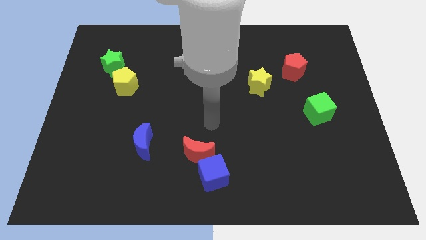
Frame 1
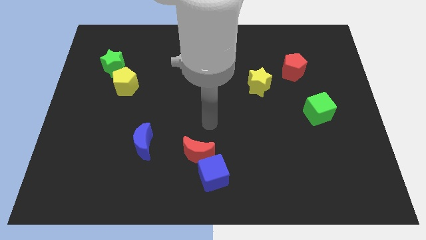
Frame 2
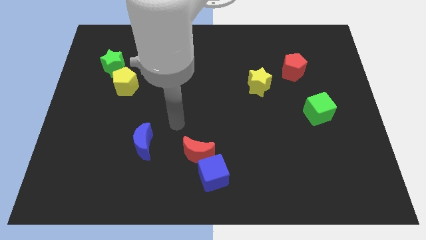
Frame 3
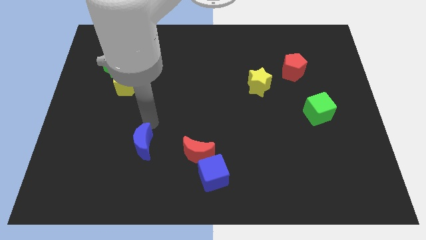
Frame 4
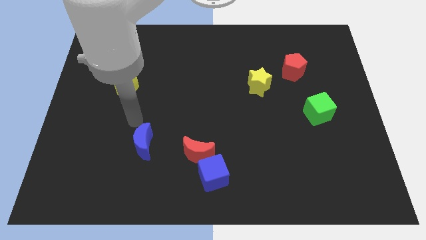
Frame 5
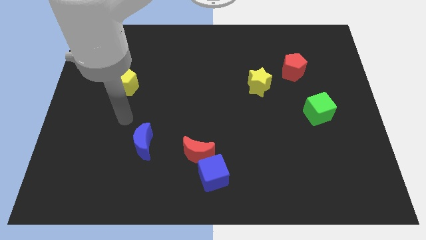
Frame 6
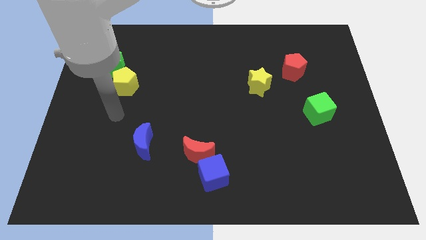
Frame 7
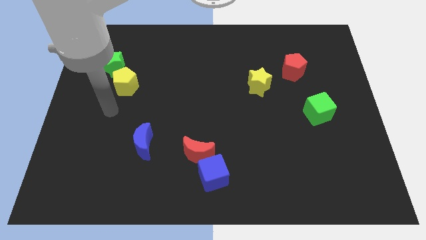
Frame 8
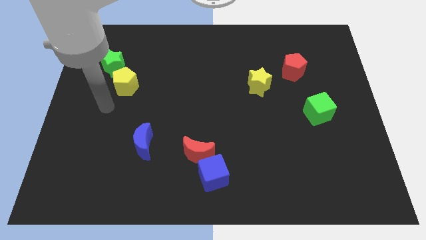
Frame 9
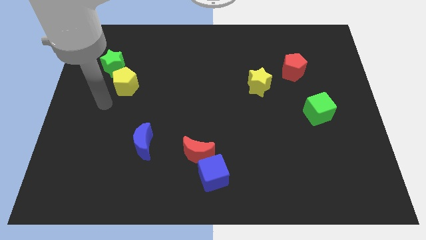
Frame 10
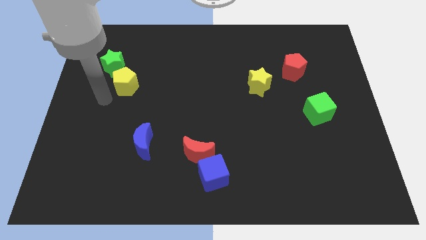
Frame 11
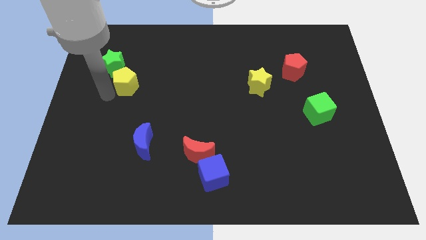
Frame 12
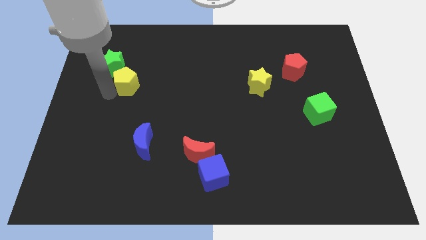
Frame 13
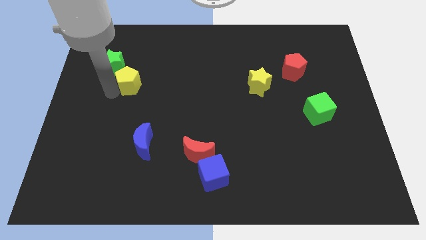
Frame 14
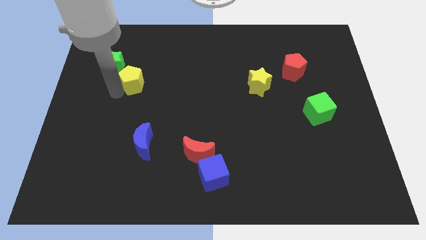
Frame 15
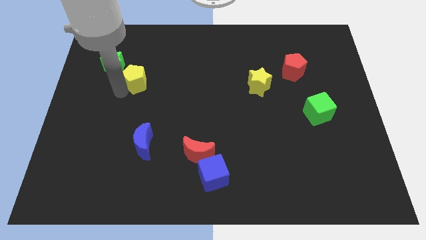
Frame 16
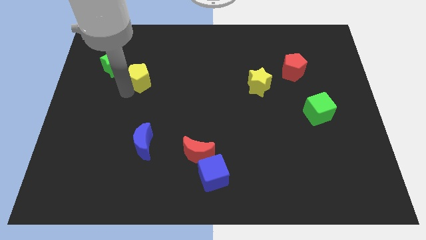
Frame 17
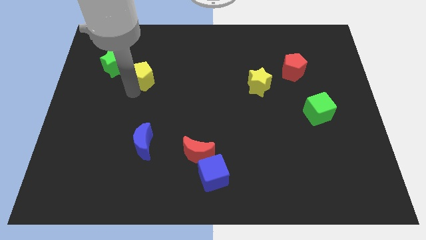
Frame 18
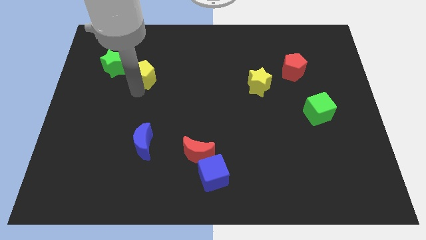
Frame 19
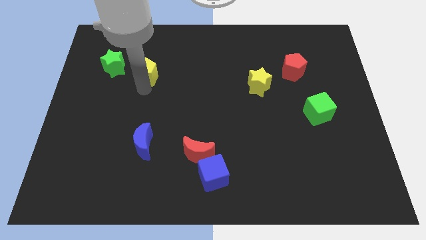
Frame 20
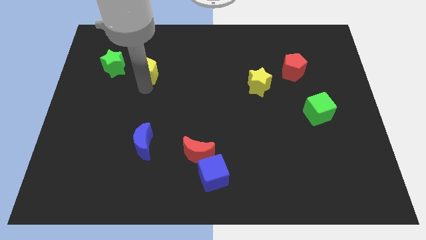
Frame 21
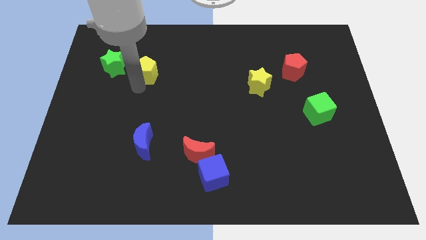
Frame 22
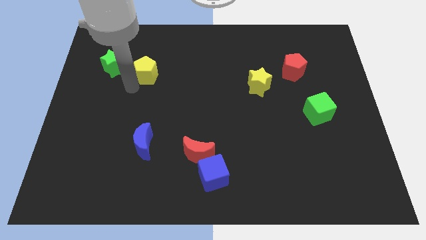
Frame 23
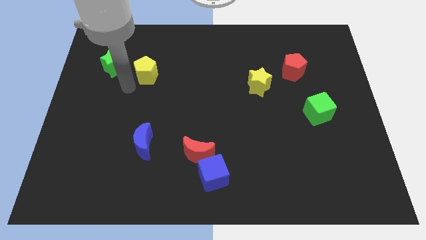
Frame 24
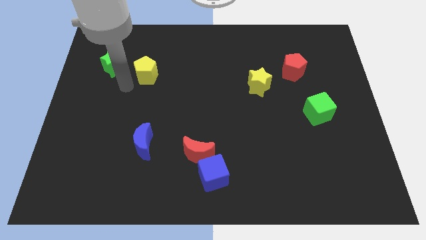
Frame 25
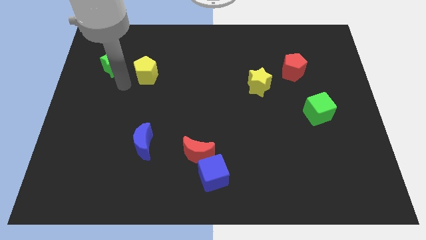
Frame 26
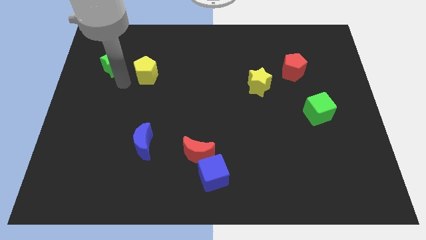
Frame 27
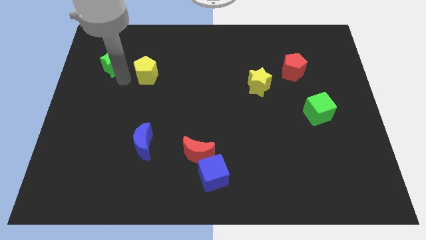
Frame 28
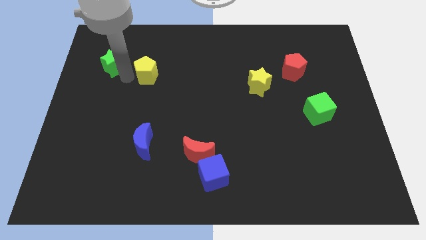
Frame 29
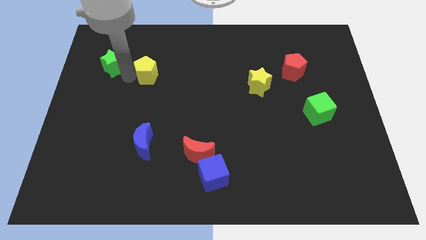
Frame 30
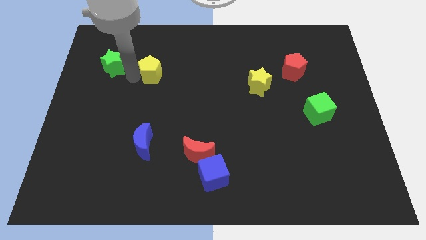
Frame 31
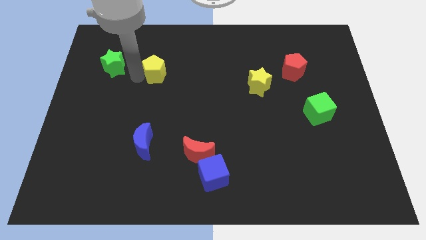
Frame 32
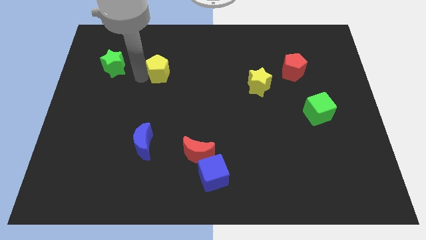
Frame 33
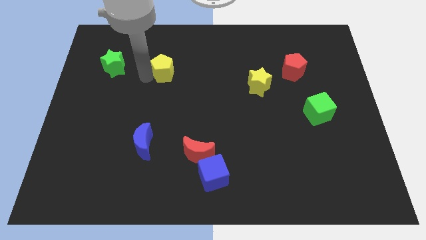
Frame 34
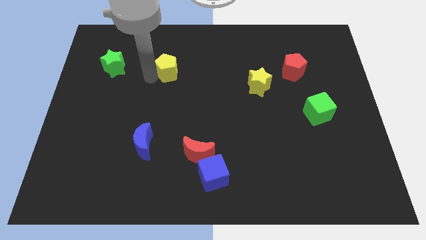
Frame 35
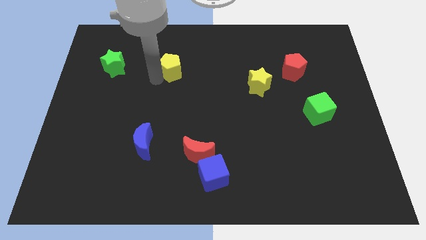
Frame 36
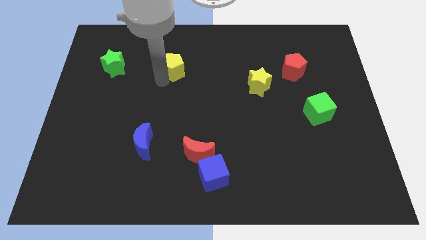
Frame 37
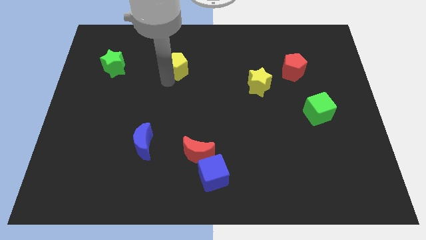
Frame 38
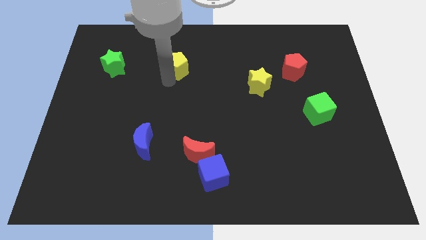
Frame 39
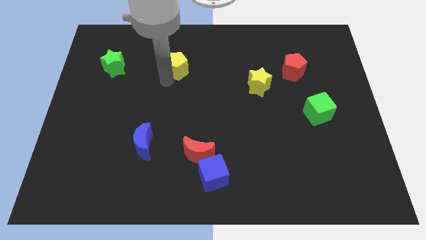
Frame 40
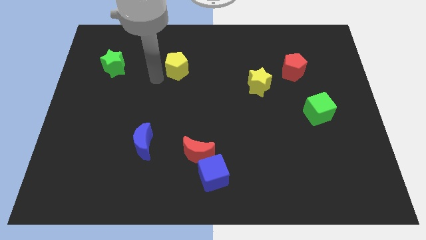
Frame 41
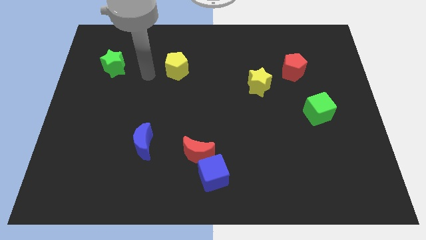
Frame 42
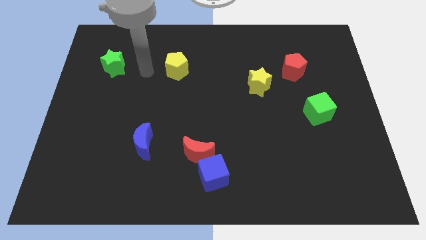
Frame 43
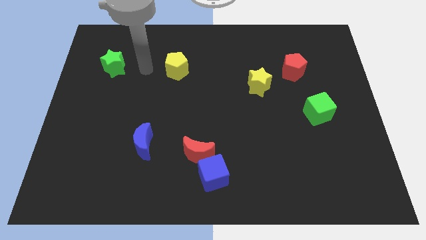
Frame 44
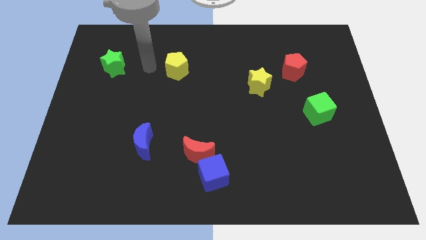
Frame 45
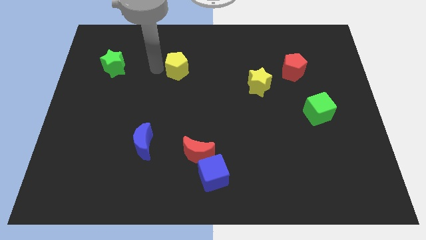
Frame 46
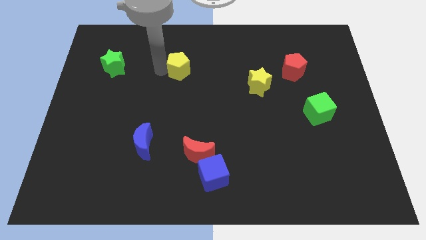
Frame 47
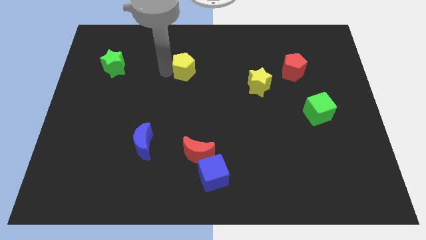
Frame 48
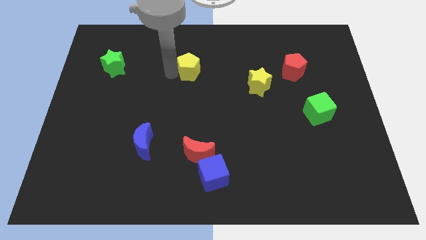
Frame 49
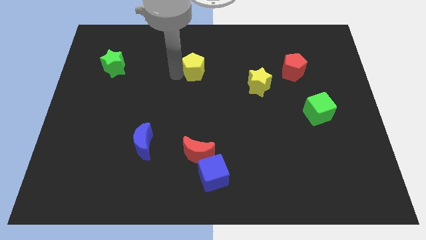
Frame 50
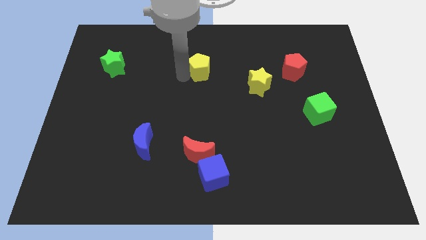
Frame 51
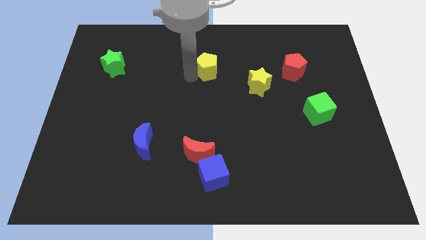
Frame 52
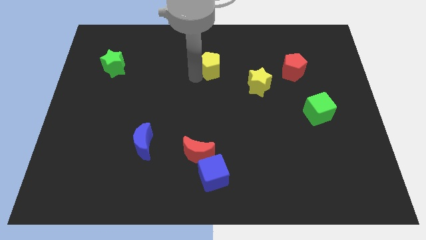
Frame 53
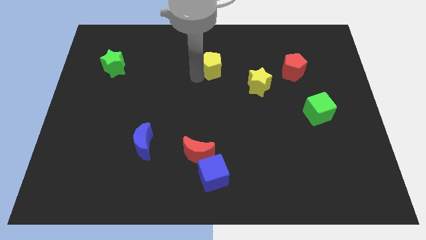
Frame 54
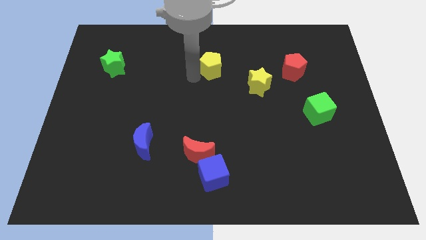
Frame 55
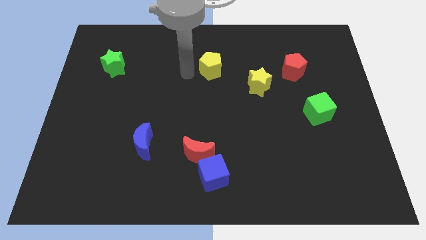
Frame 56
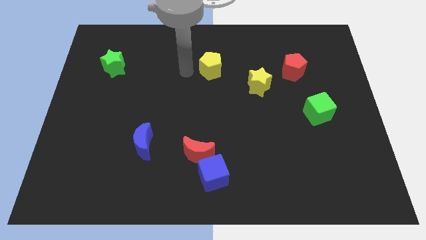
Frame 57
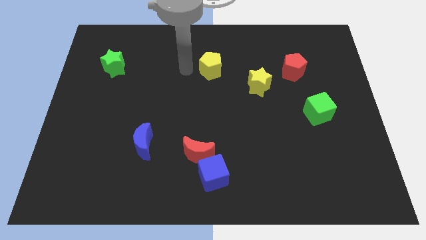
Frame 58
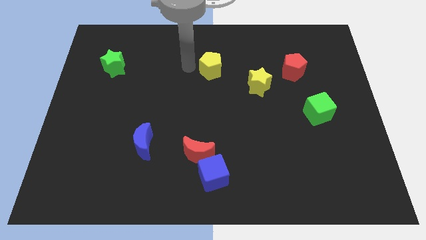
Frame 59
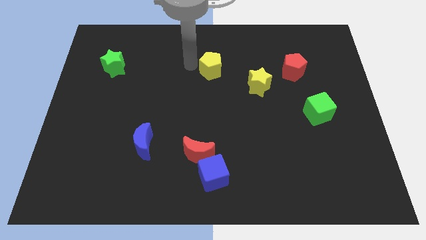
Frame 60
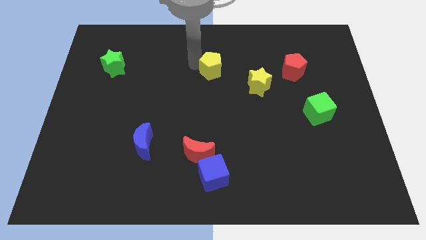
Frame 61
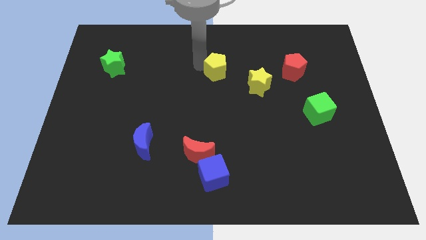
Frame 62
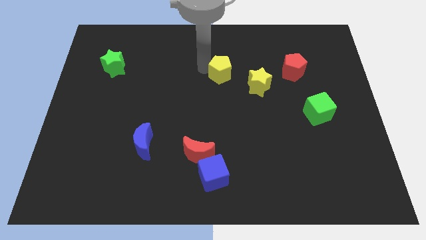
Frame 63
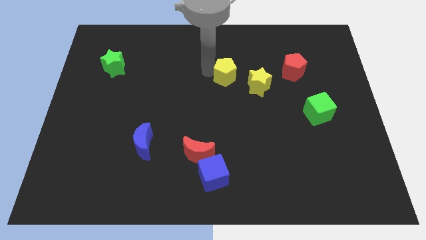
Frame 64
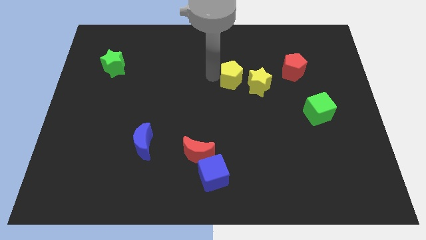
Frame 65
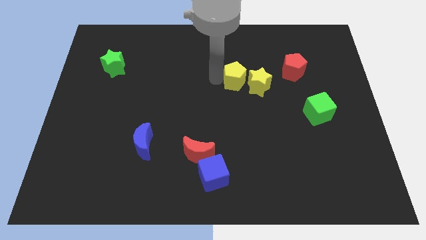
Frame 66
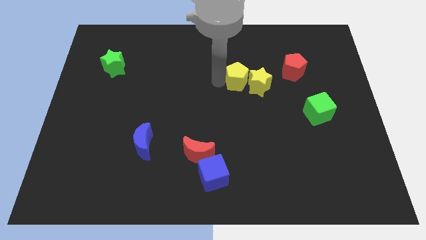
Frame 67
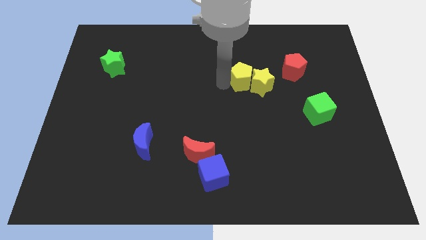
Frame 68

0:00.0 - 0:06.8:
move the yellow pentagon to the yellow star

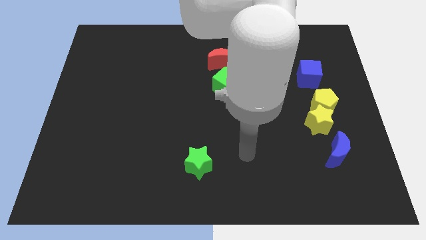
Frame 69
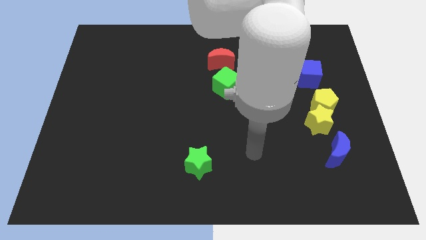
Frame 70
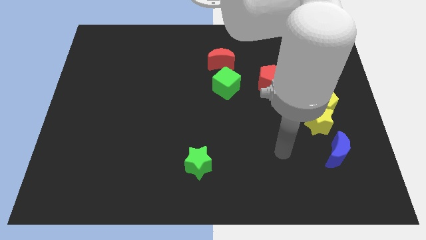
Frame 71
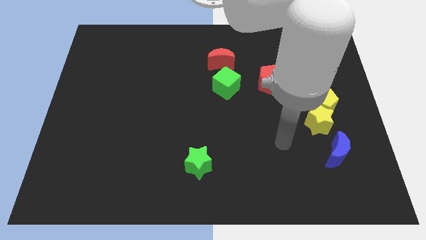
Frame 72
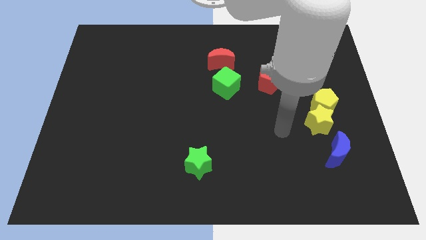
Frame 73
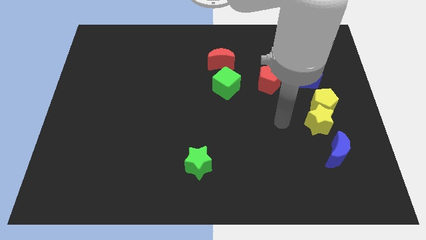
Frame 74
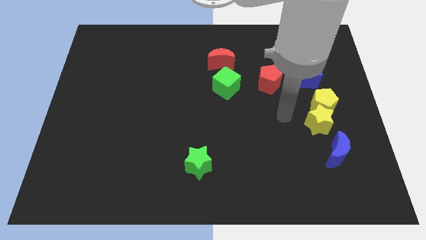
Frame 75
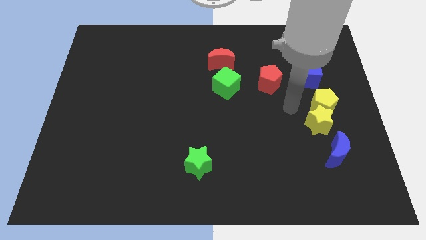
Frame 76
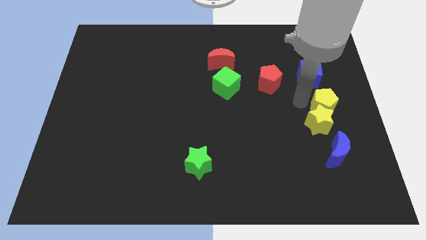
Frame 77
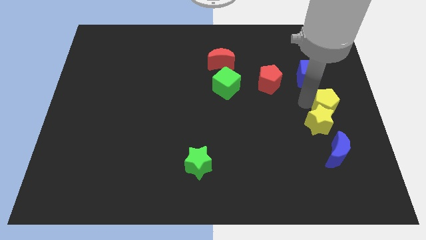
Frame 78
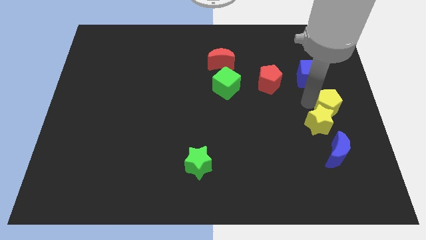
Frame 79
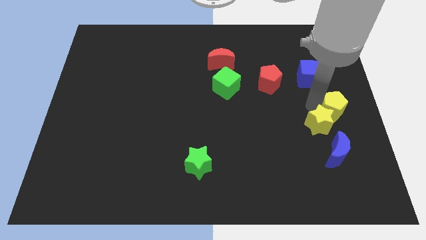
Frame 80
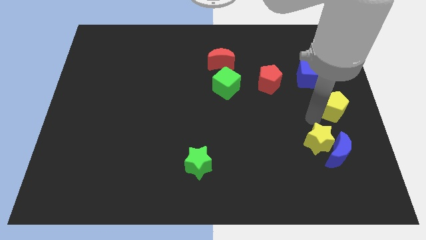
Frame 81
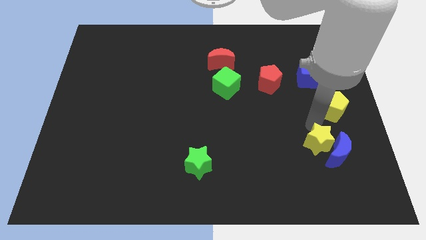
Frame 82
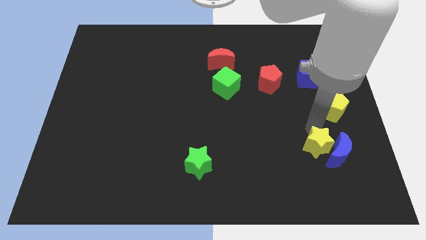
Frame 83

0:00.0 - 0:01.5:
push the yellow star to the blue moon

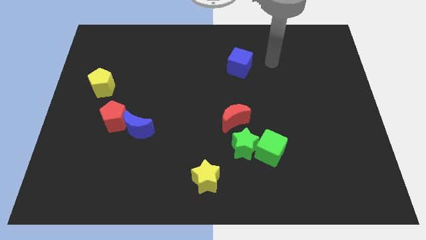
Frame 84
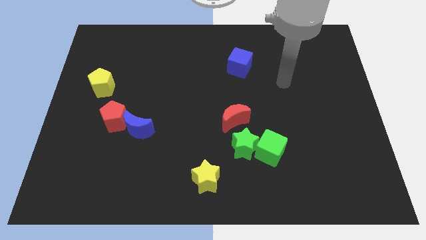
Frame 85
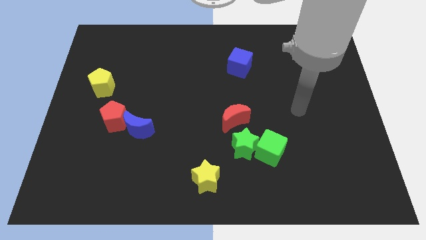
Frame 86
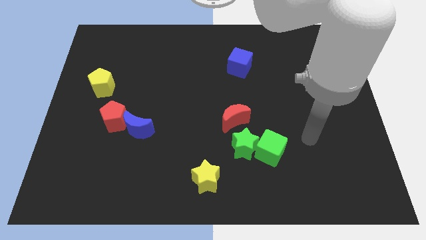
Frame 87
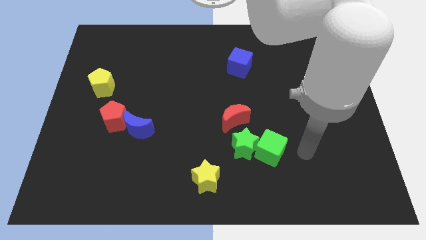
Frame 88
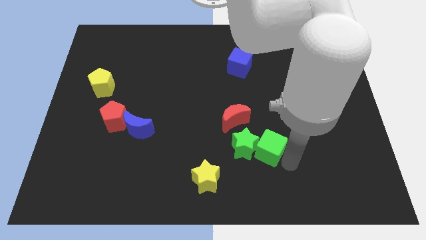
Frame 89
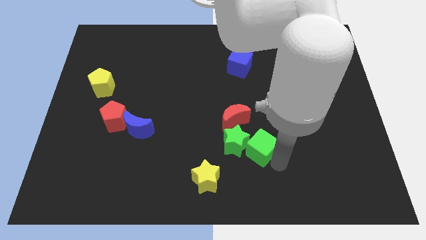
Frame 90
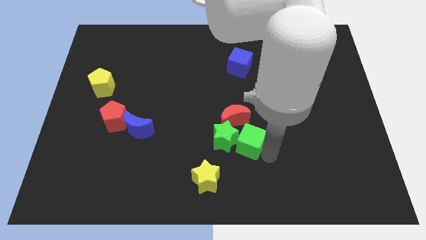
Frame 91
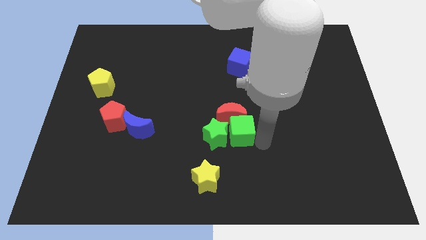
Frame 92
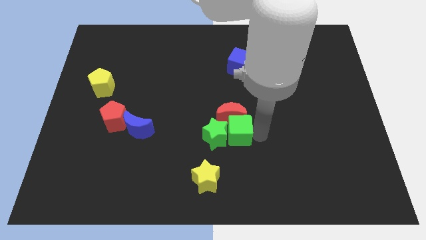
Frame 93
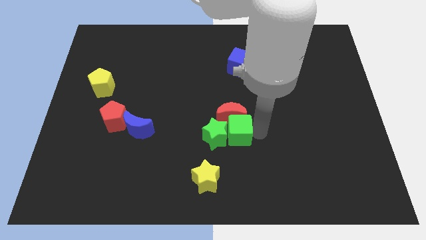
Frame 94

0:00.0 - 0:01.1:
slide the green cube close to the red moon
